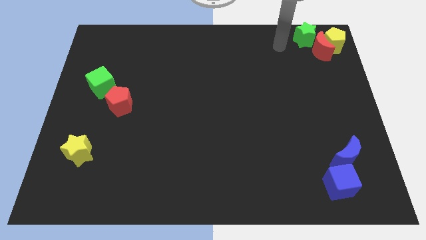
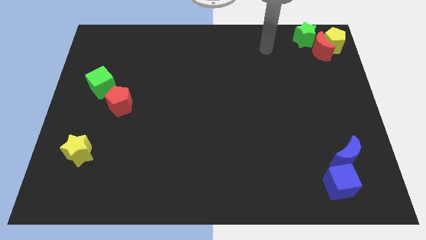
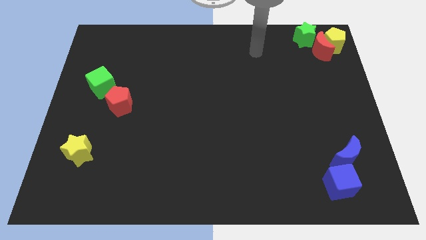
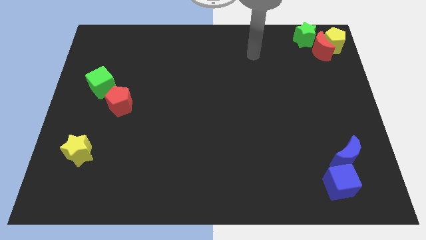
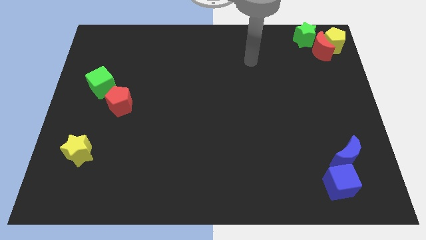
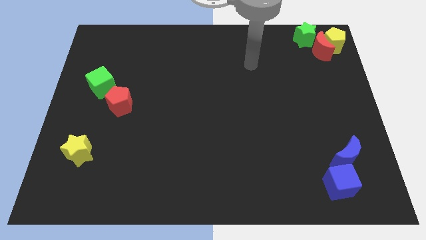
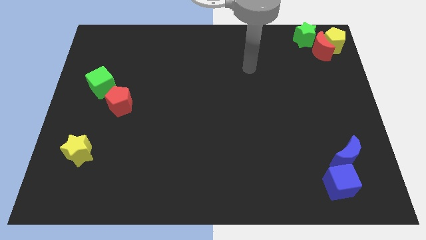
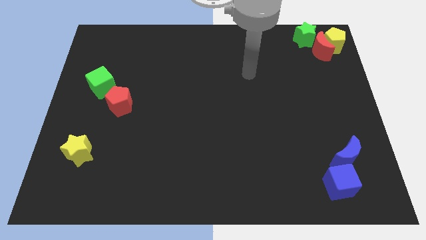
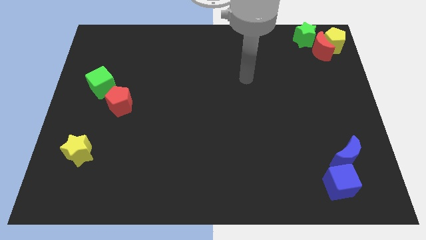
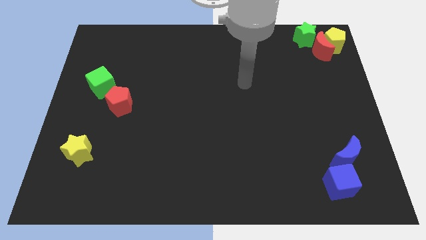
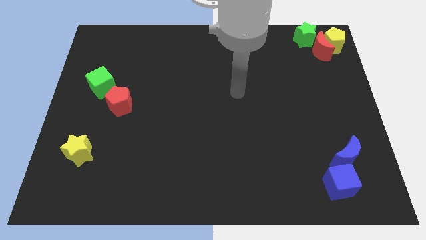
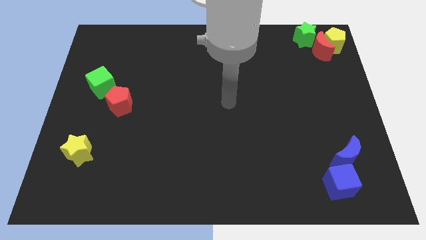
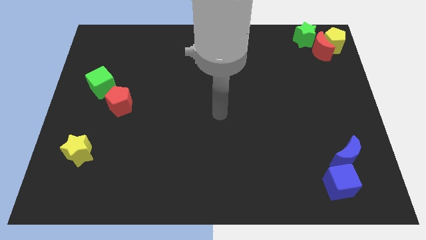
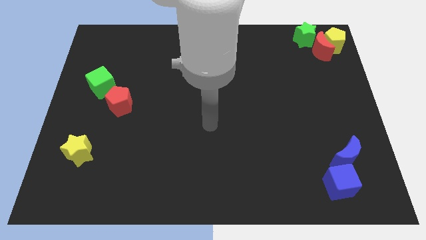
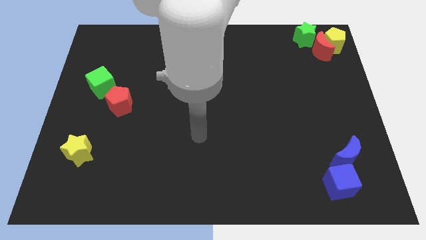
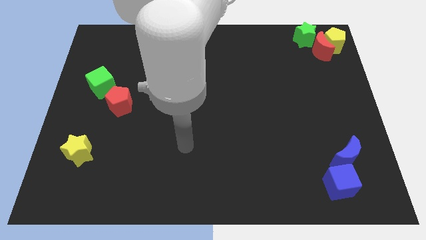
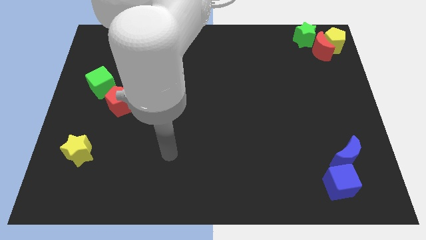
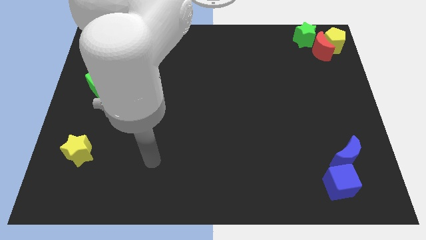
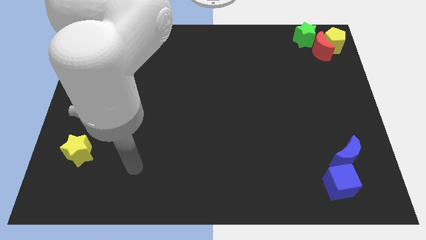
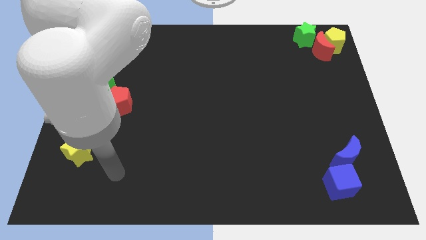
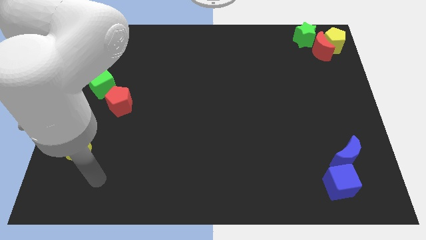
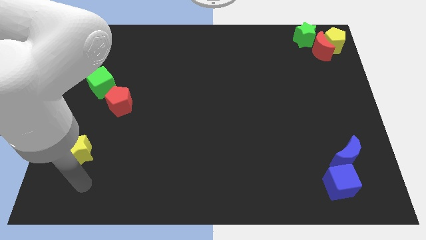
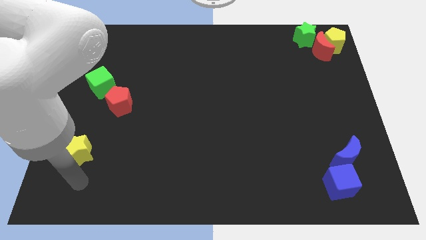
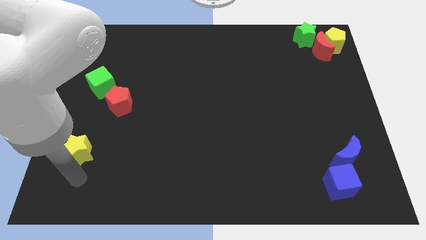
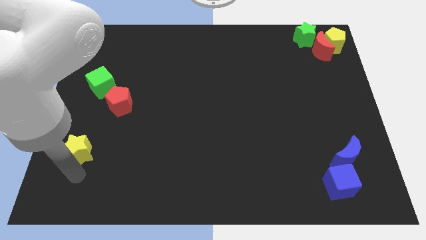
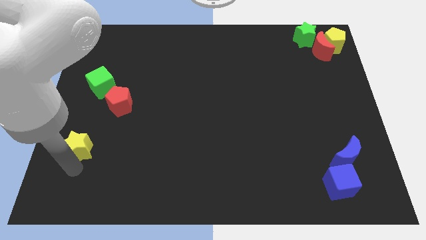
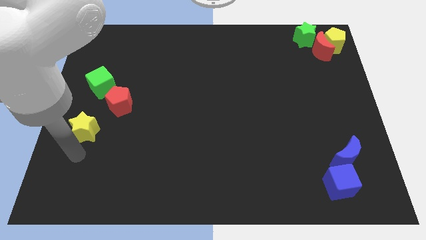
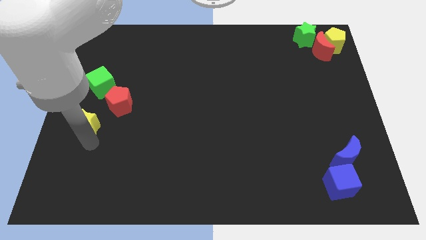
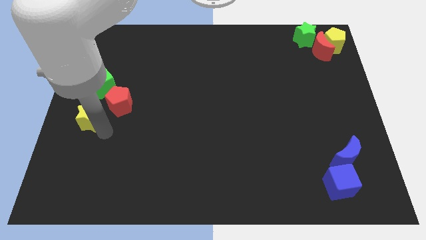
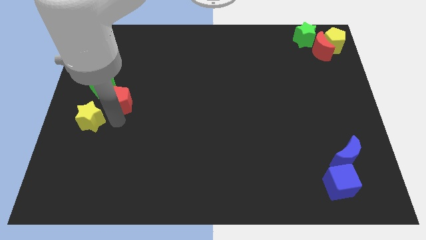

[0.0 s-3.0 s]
move the yellow star to the bottom side of the green cube

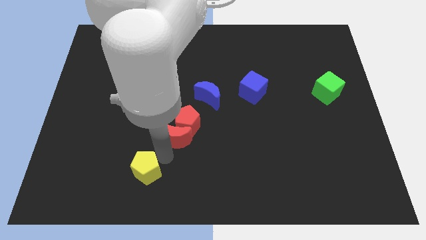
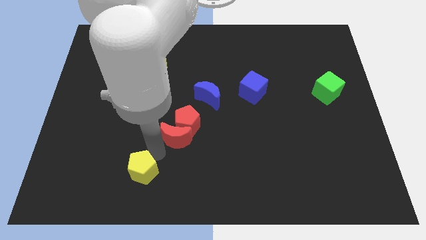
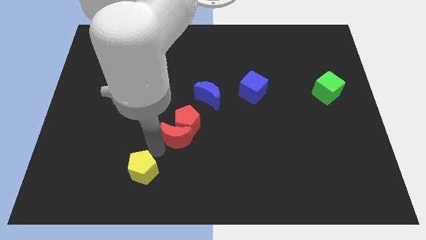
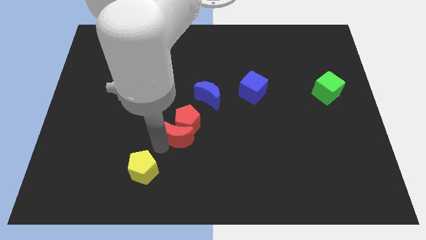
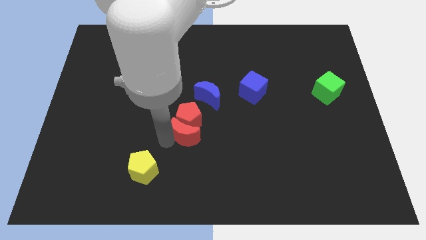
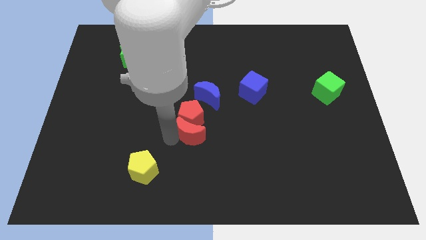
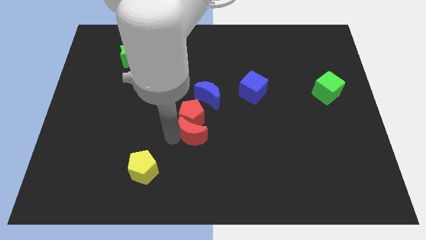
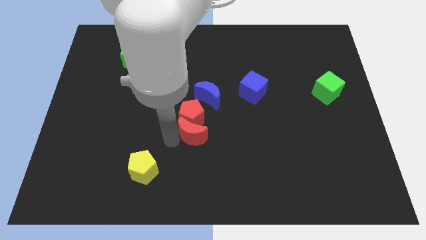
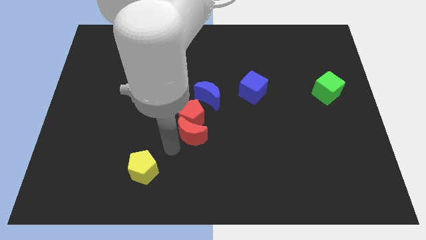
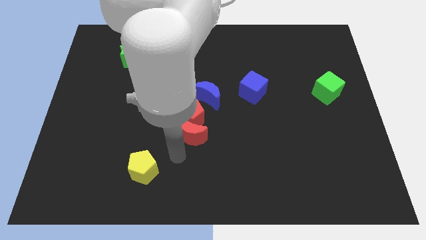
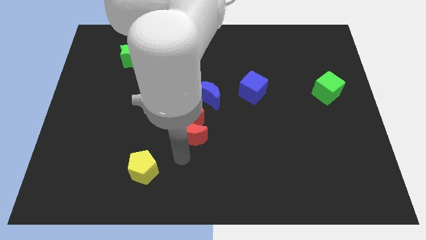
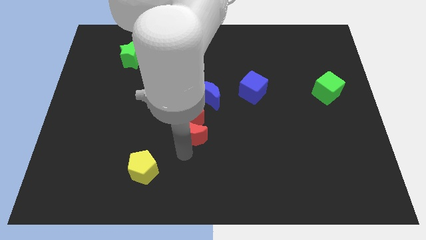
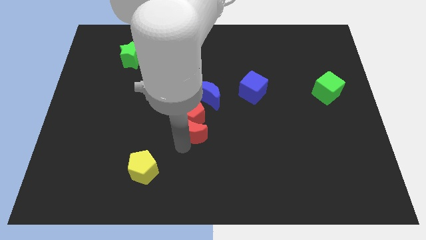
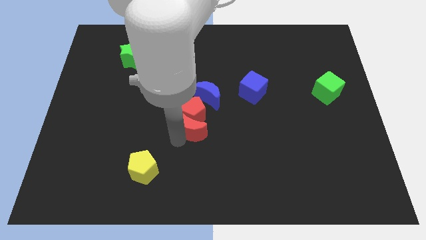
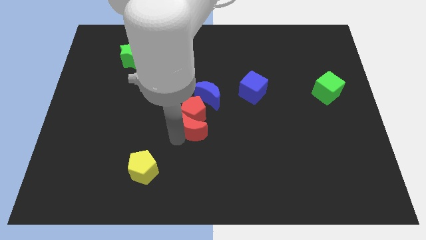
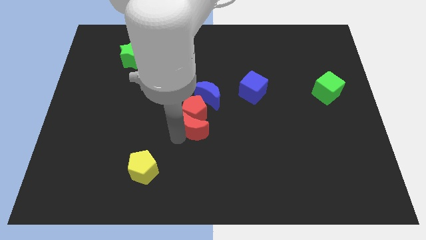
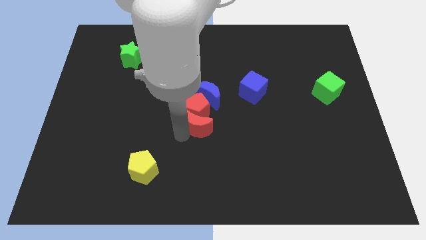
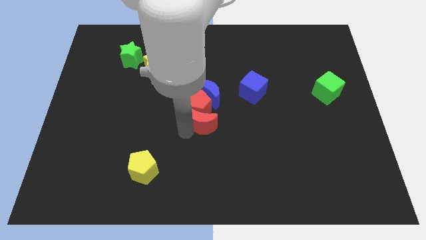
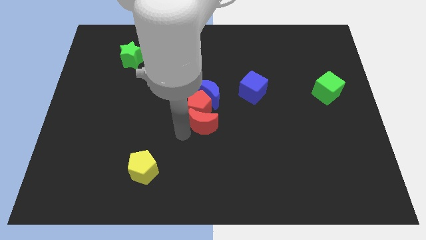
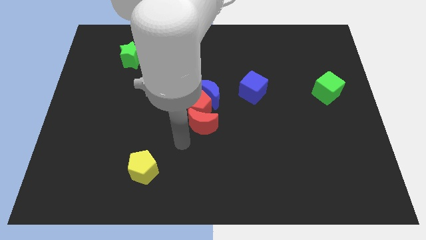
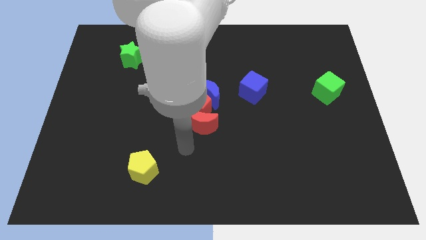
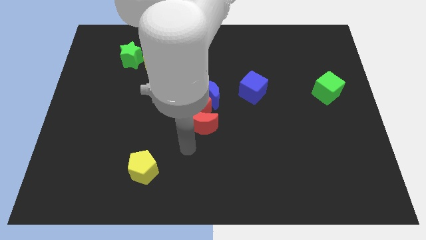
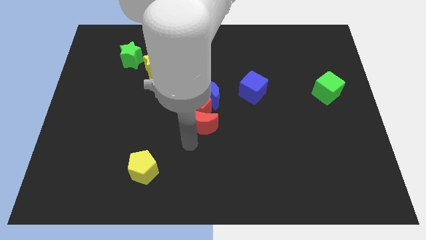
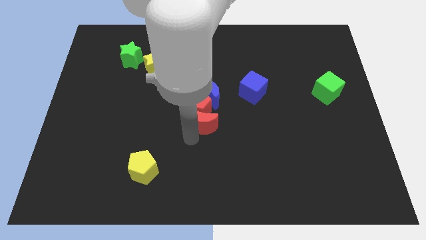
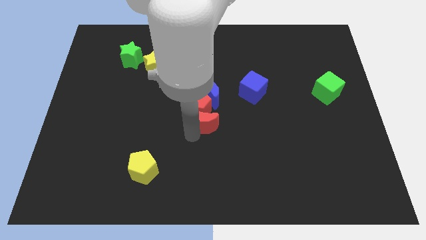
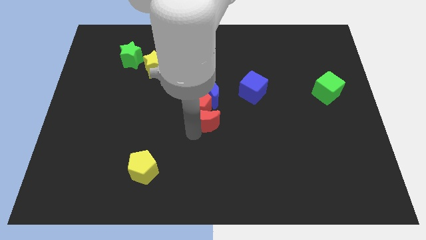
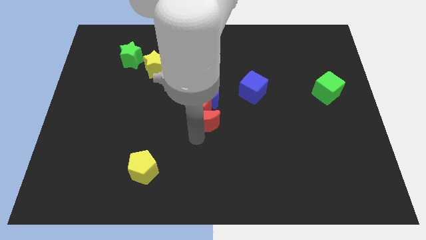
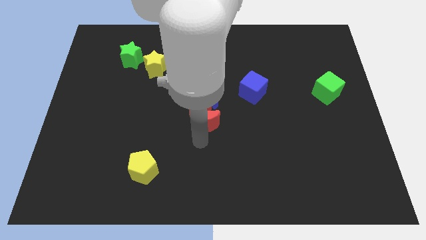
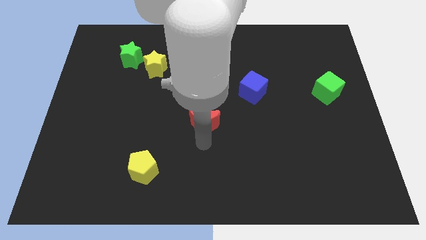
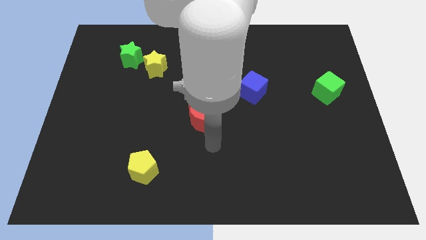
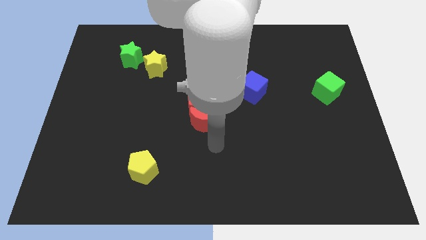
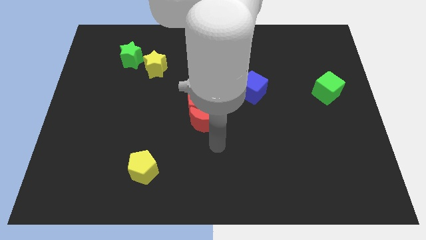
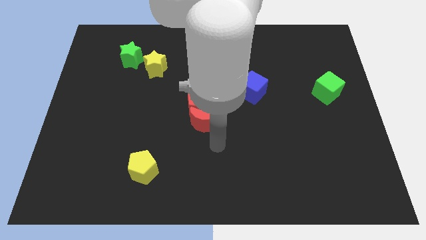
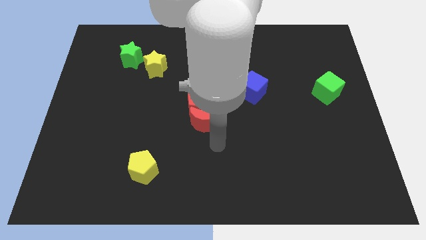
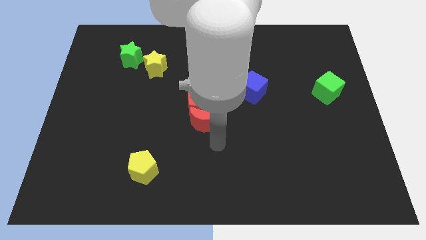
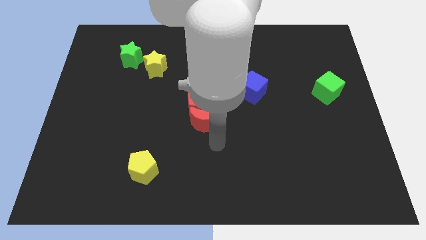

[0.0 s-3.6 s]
move the red crescent along with red pentagon to the center of the board

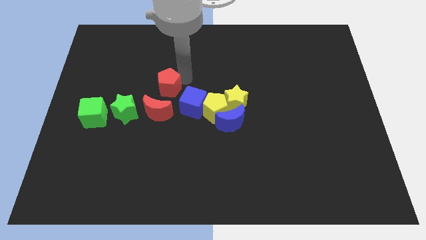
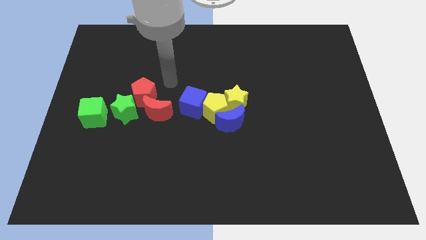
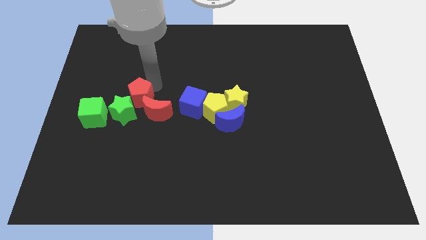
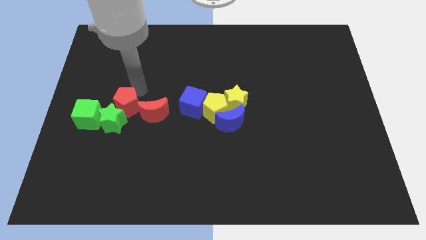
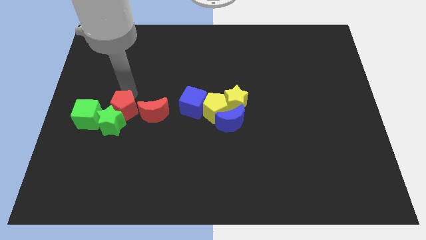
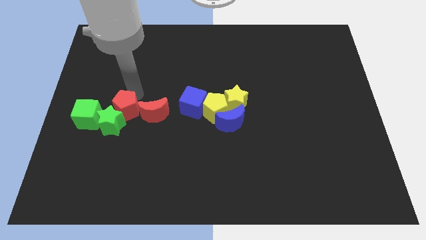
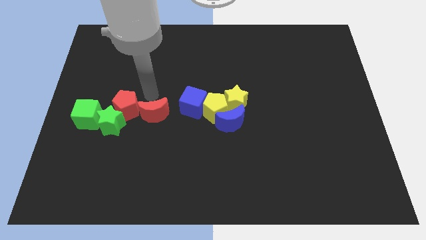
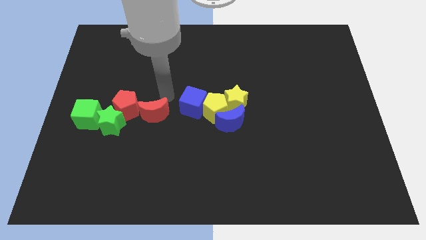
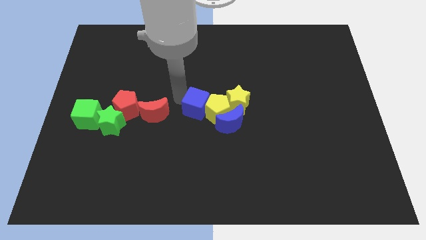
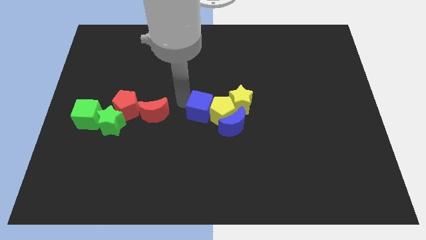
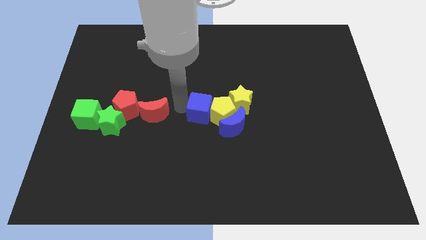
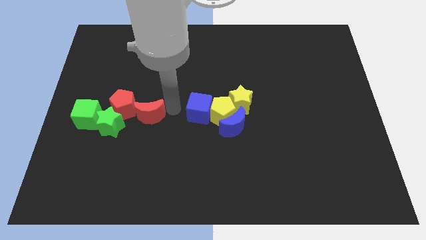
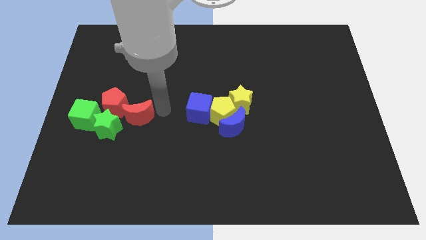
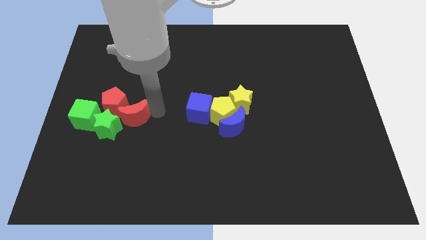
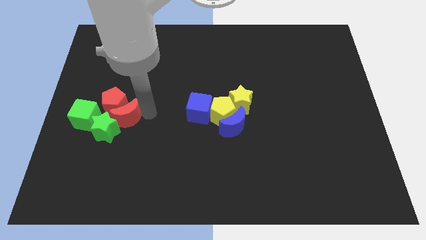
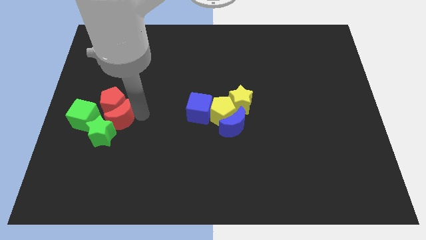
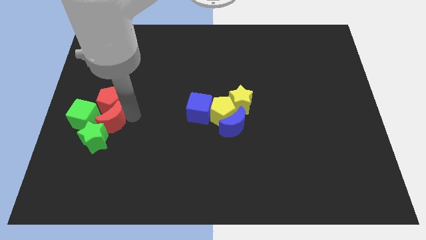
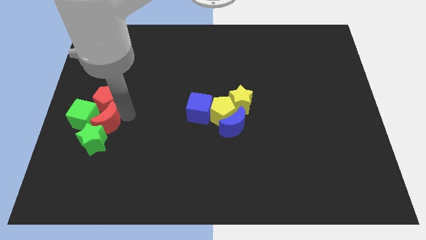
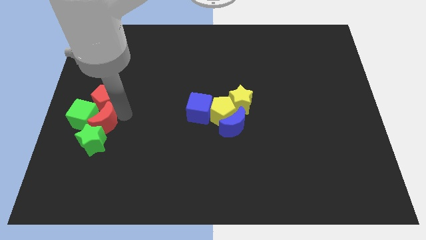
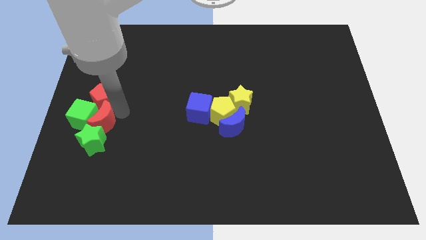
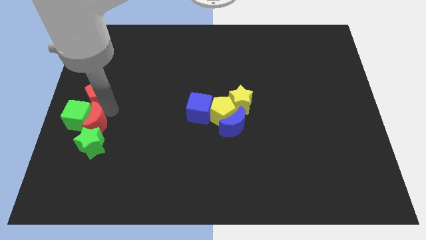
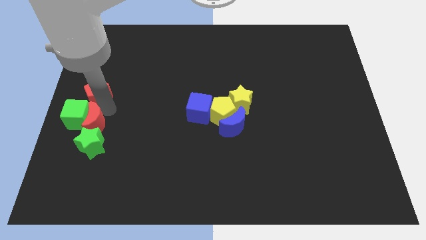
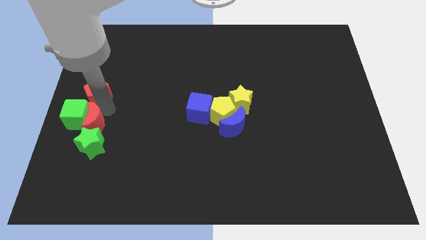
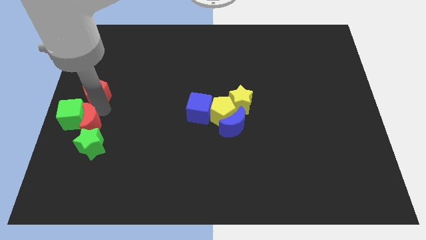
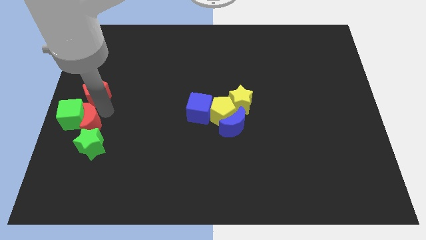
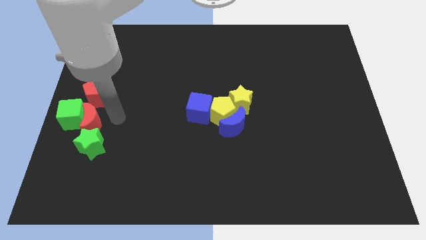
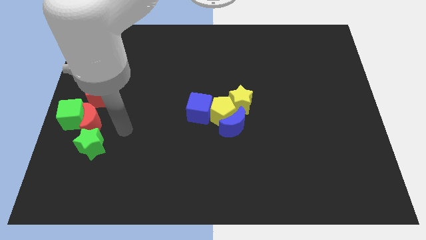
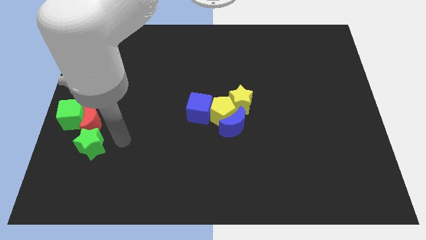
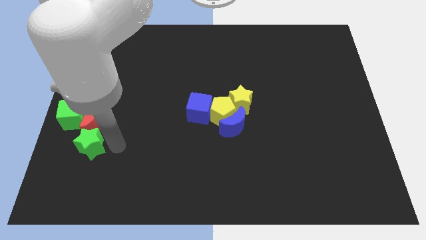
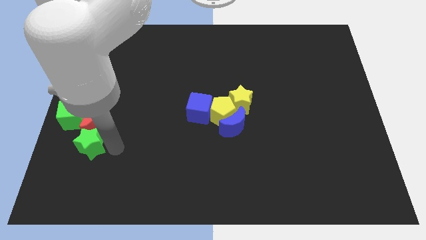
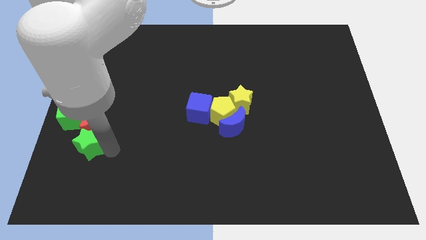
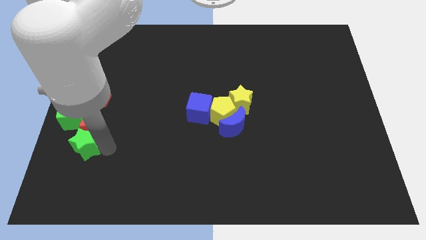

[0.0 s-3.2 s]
make a group of red and green blocks
